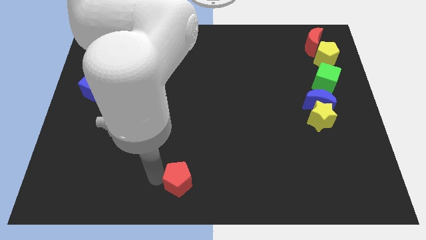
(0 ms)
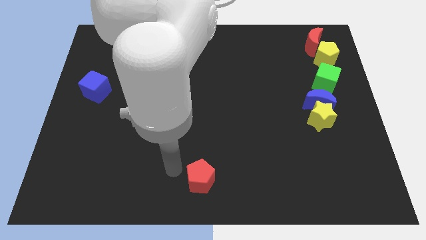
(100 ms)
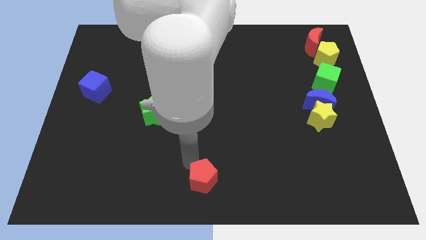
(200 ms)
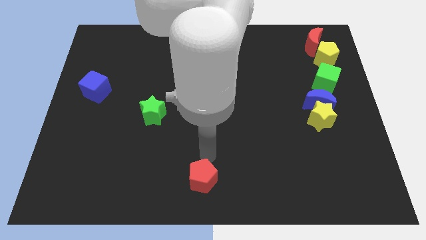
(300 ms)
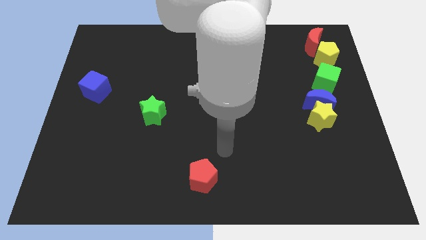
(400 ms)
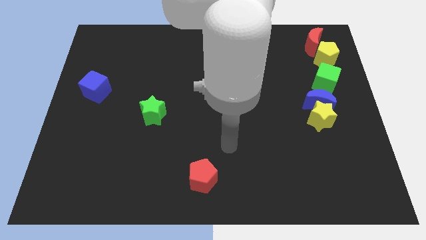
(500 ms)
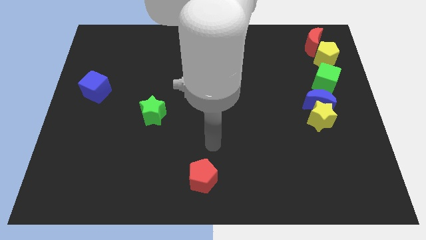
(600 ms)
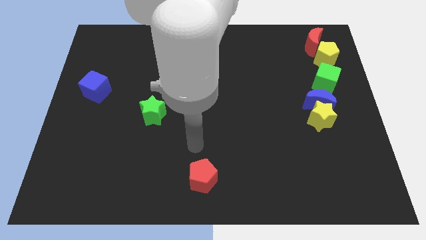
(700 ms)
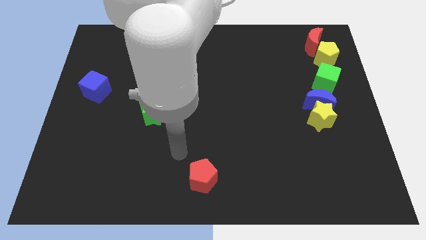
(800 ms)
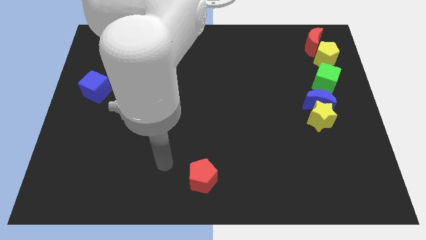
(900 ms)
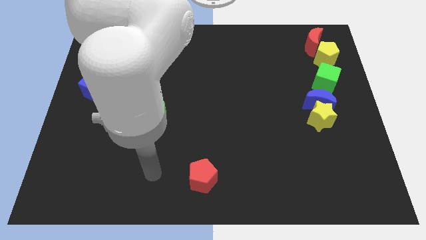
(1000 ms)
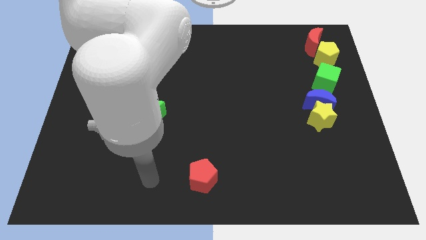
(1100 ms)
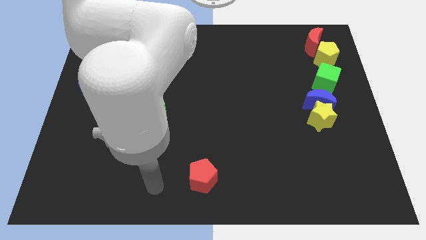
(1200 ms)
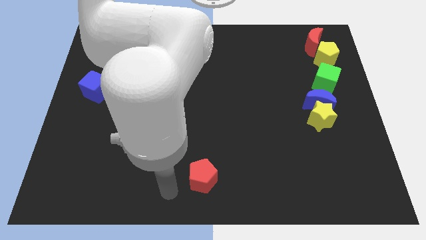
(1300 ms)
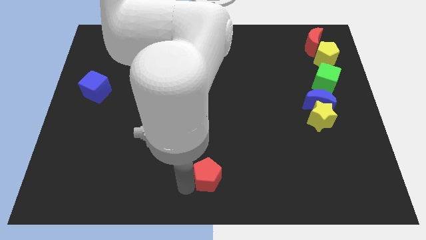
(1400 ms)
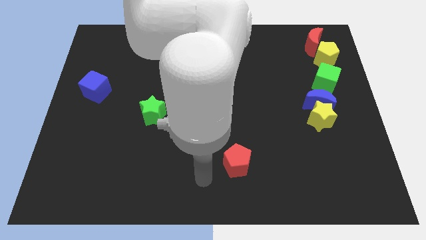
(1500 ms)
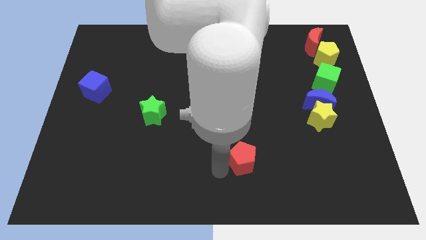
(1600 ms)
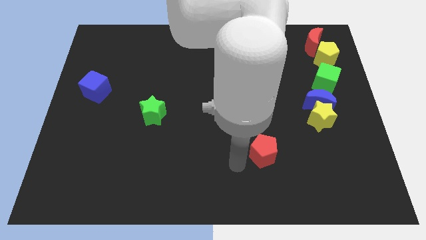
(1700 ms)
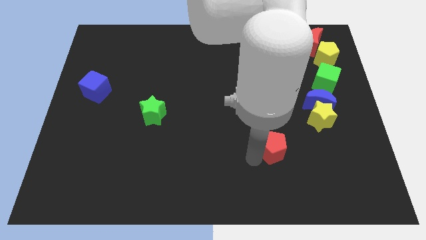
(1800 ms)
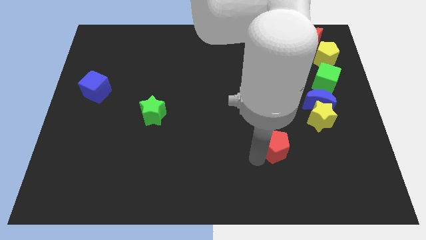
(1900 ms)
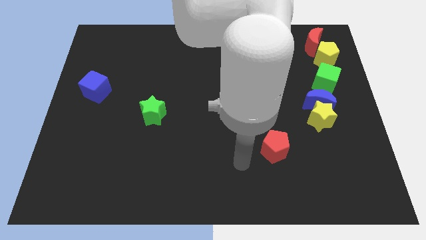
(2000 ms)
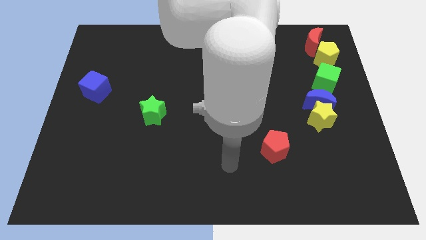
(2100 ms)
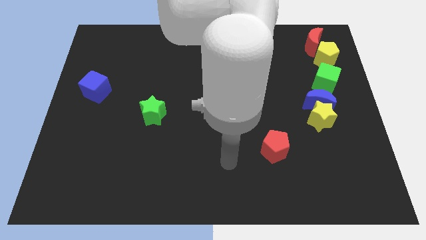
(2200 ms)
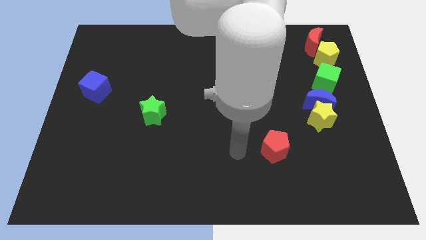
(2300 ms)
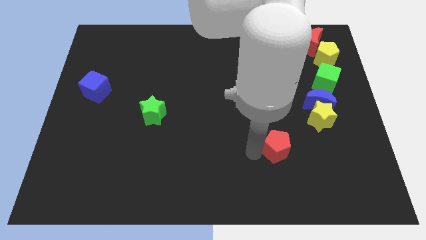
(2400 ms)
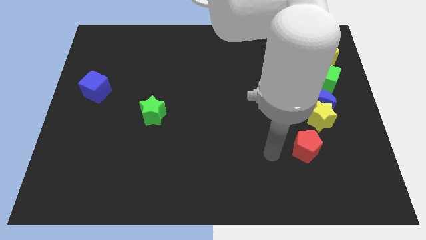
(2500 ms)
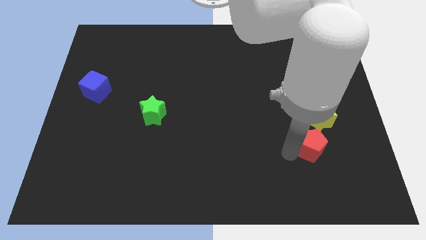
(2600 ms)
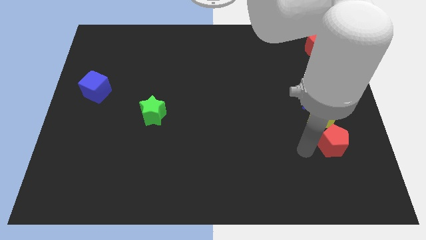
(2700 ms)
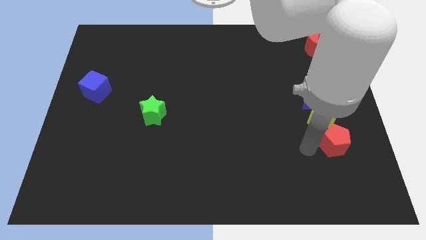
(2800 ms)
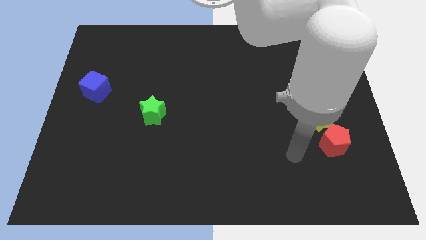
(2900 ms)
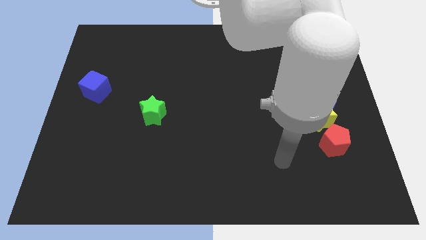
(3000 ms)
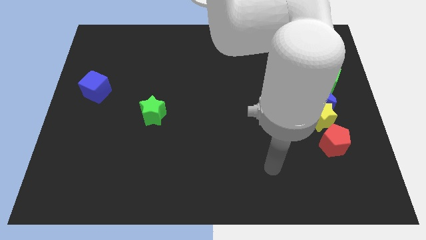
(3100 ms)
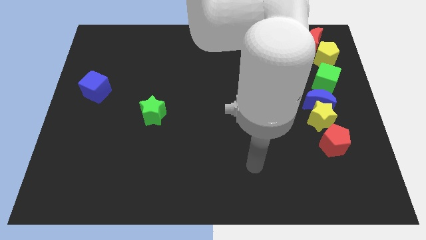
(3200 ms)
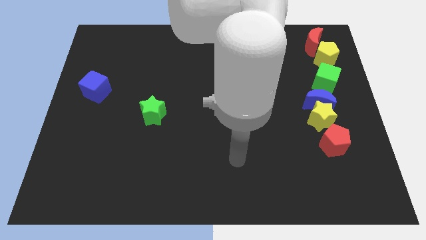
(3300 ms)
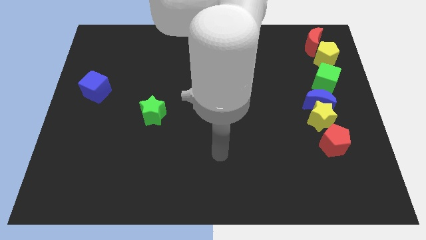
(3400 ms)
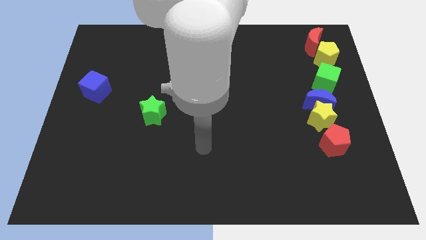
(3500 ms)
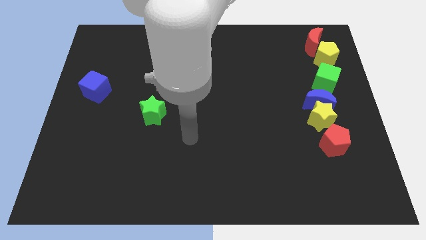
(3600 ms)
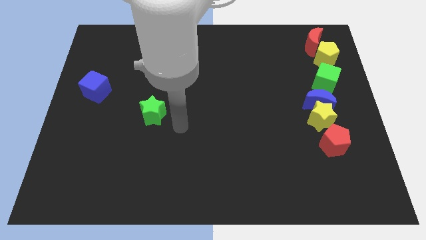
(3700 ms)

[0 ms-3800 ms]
move the red pentagon below the yellow star

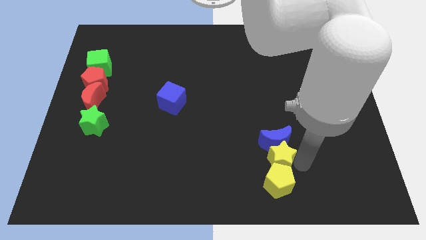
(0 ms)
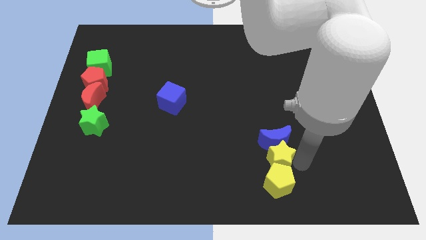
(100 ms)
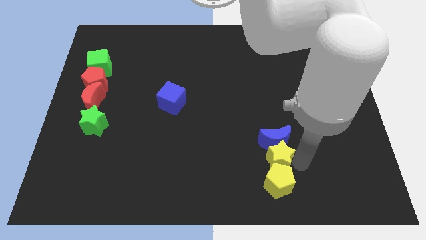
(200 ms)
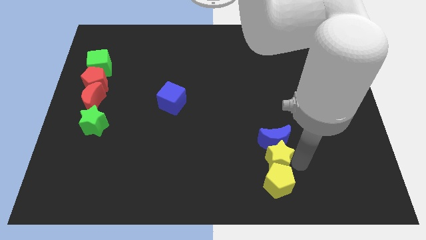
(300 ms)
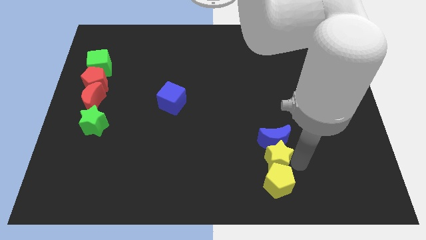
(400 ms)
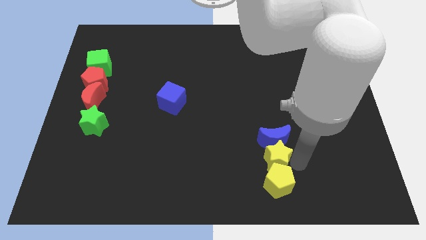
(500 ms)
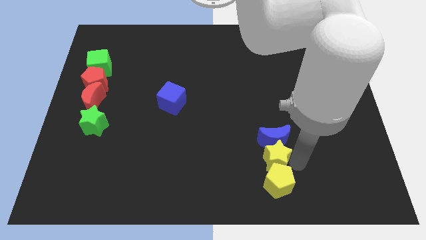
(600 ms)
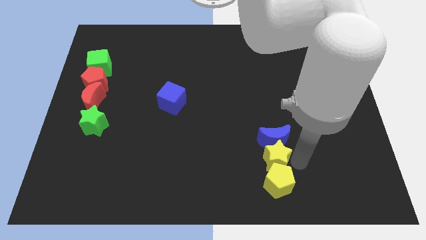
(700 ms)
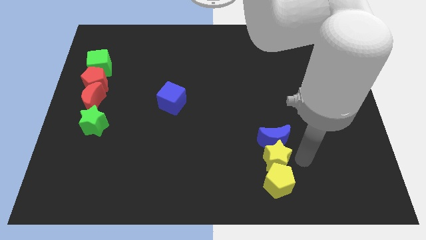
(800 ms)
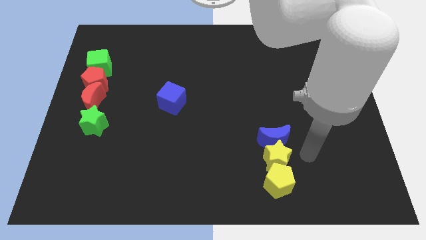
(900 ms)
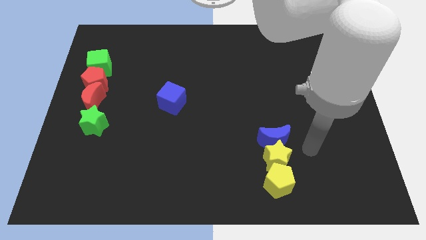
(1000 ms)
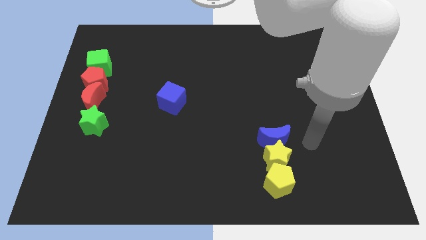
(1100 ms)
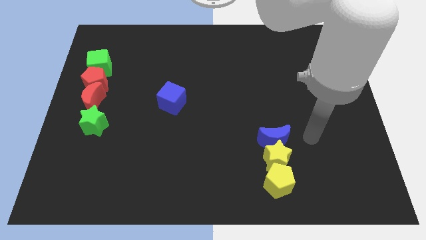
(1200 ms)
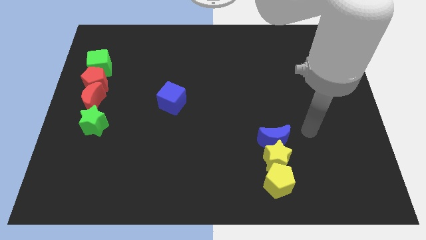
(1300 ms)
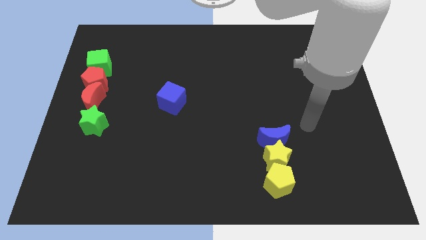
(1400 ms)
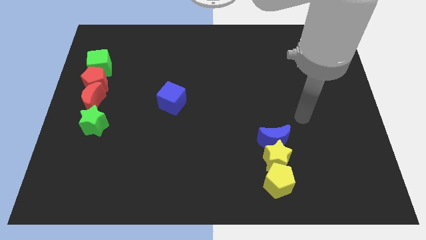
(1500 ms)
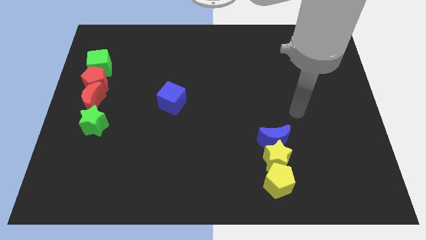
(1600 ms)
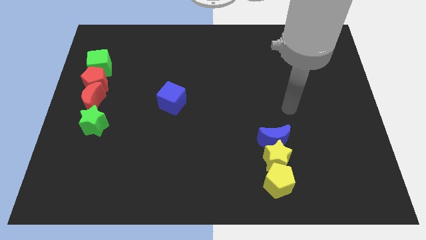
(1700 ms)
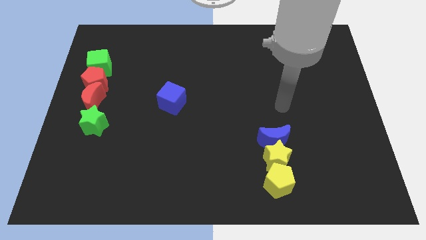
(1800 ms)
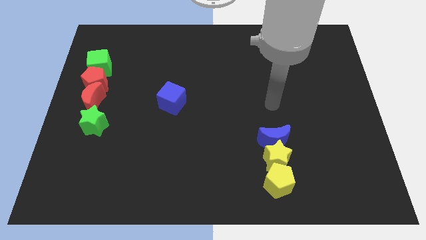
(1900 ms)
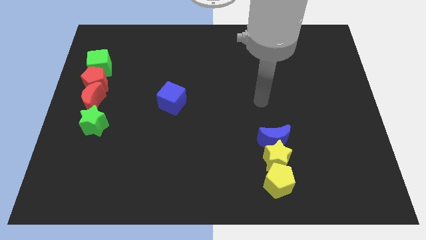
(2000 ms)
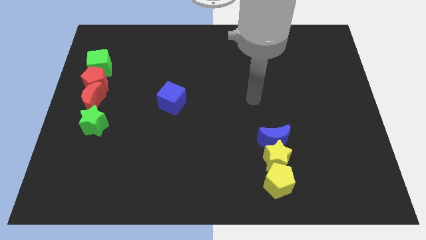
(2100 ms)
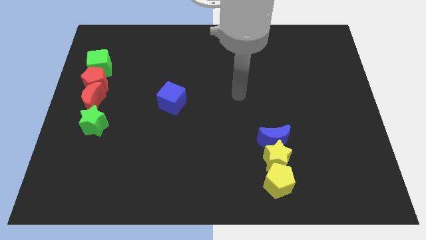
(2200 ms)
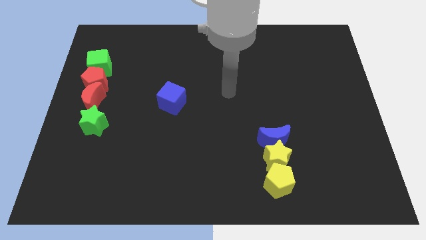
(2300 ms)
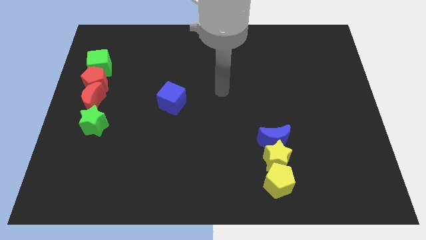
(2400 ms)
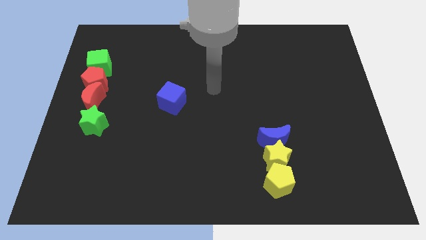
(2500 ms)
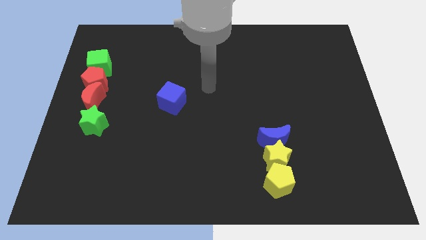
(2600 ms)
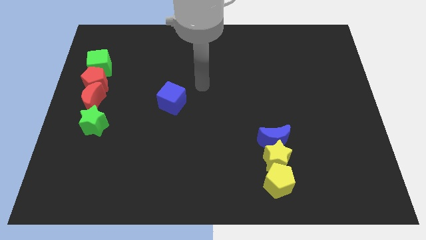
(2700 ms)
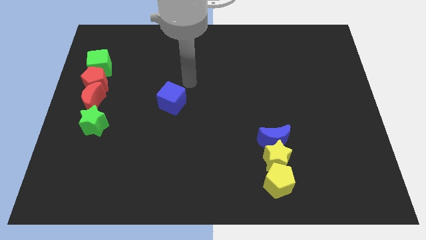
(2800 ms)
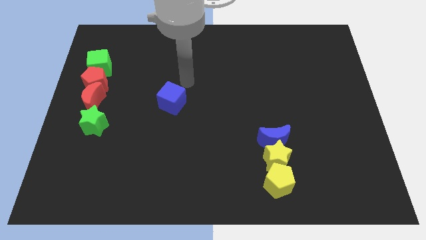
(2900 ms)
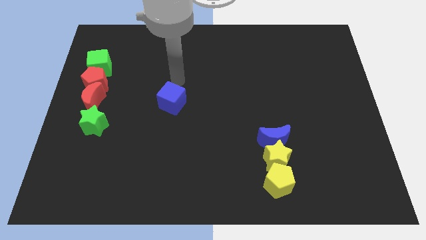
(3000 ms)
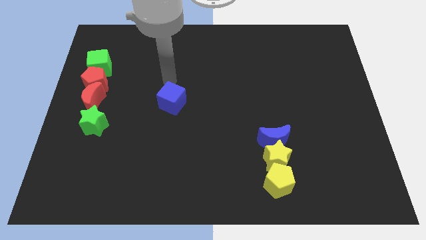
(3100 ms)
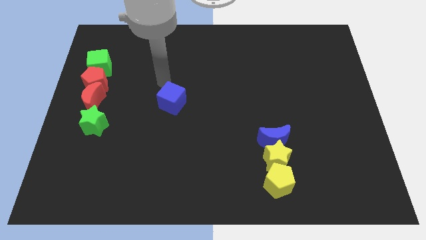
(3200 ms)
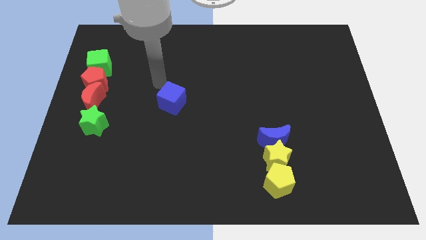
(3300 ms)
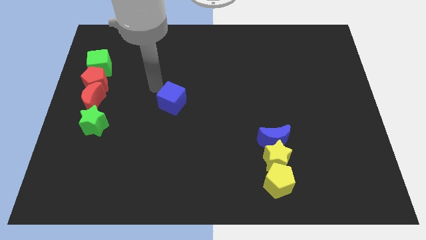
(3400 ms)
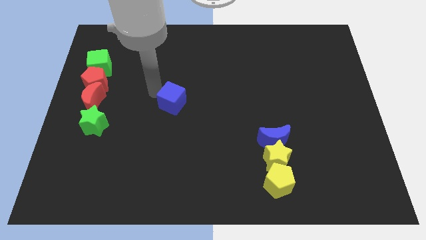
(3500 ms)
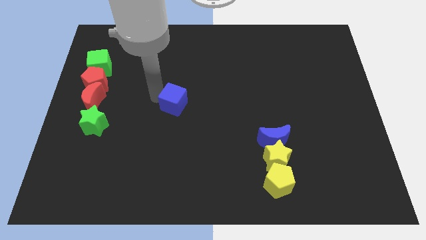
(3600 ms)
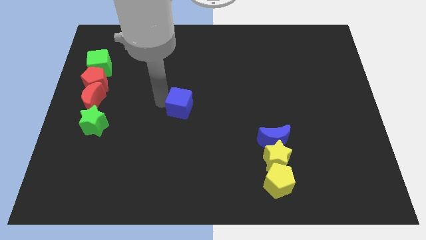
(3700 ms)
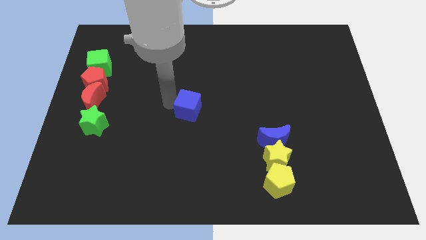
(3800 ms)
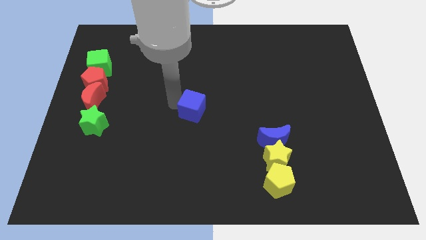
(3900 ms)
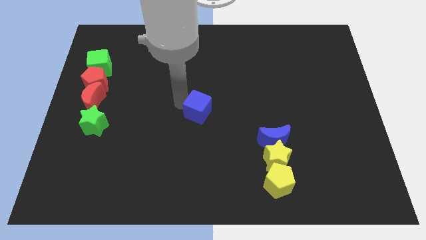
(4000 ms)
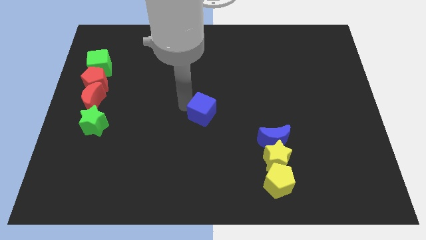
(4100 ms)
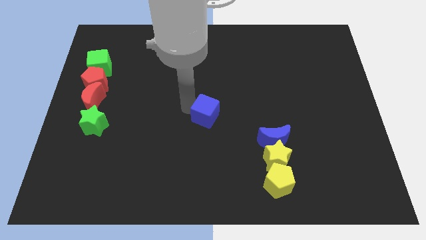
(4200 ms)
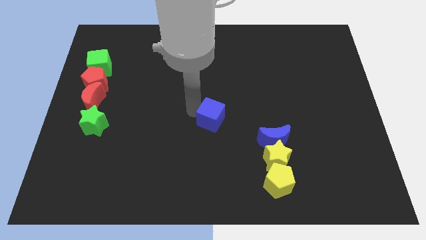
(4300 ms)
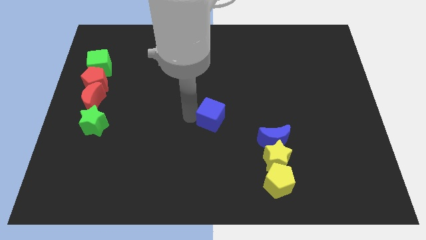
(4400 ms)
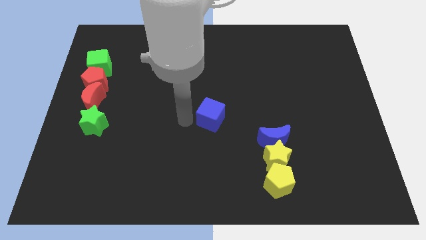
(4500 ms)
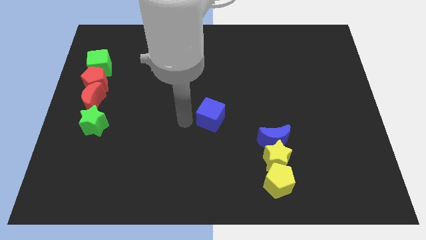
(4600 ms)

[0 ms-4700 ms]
move the blue cube to the center of the board

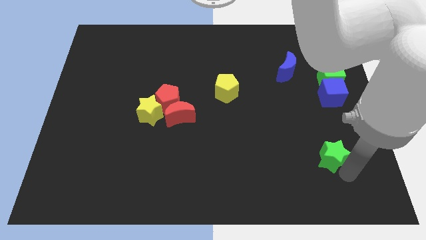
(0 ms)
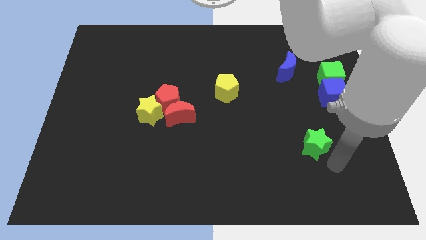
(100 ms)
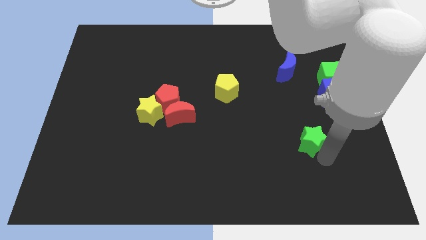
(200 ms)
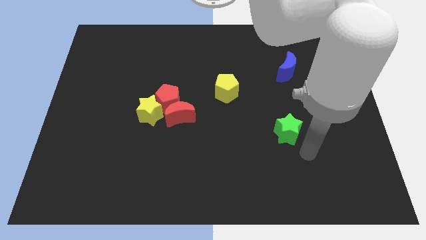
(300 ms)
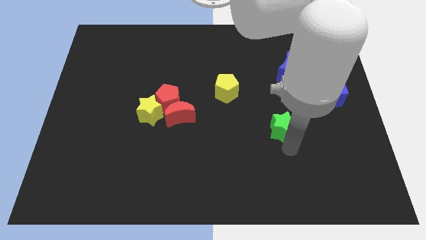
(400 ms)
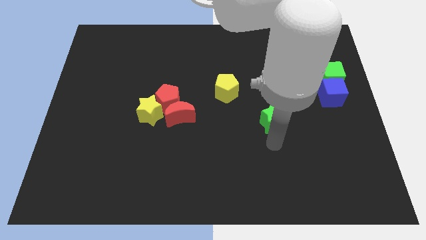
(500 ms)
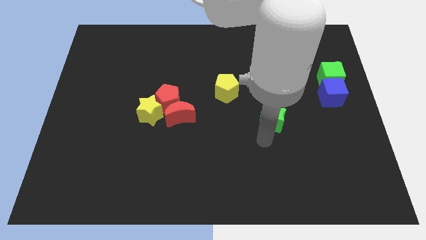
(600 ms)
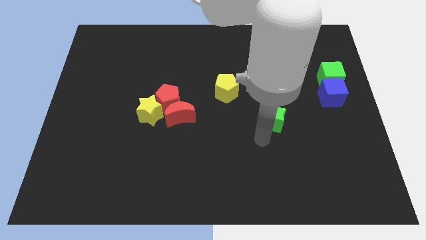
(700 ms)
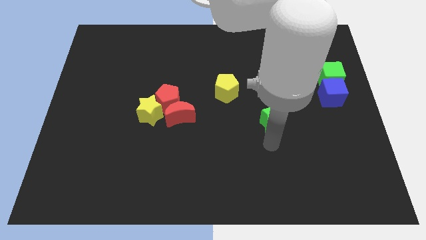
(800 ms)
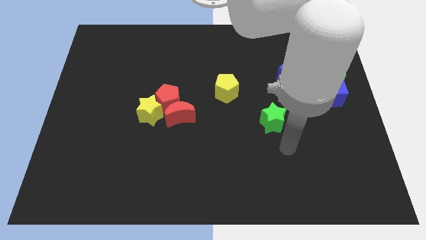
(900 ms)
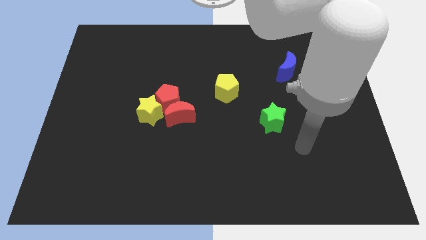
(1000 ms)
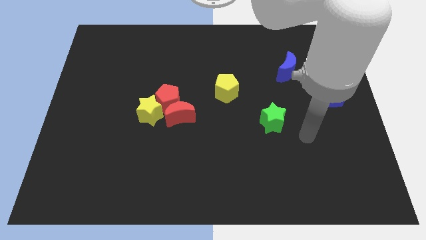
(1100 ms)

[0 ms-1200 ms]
place the green star below the blue moon
